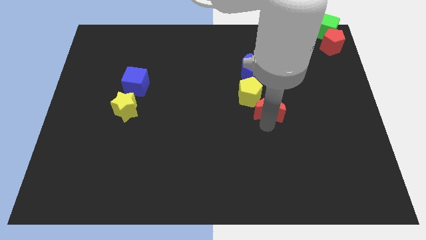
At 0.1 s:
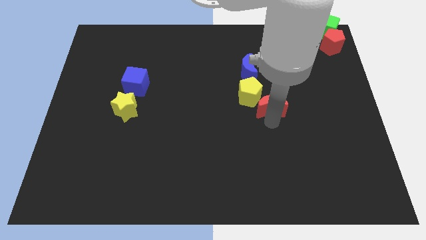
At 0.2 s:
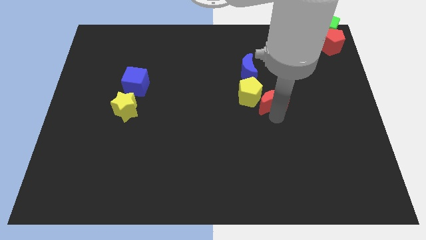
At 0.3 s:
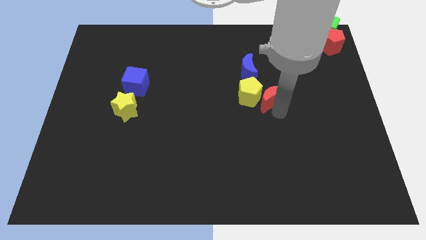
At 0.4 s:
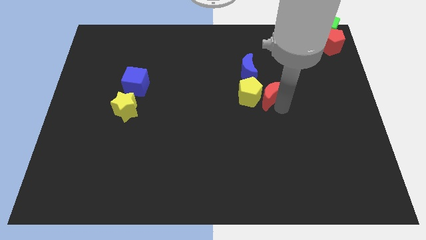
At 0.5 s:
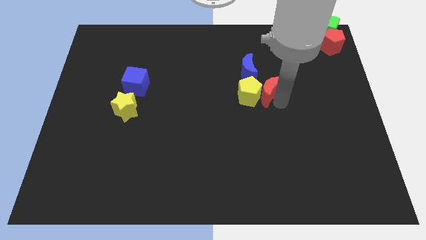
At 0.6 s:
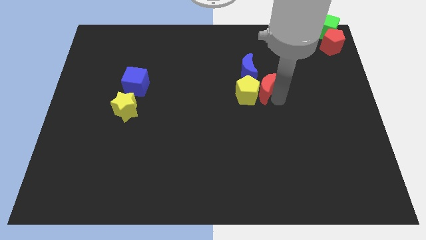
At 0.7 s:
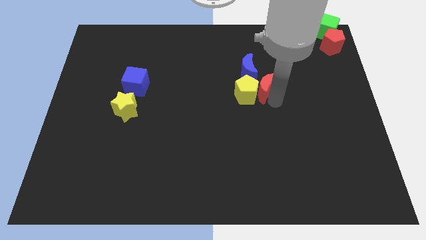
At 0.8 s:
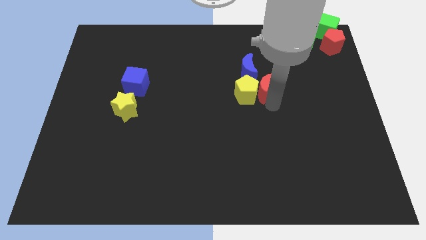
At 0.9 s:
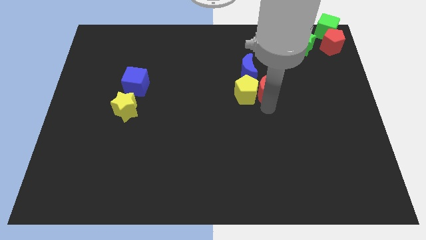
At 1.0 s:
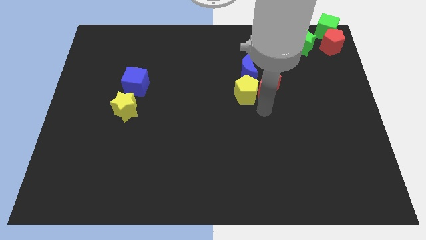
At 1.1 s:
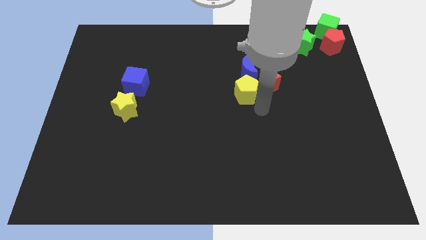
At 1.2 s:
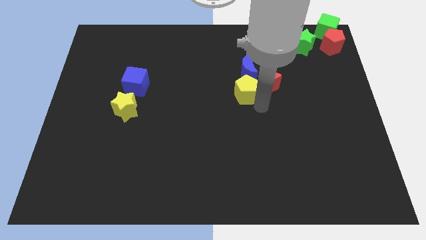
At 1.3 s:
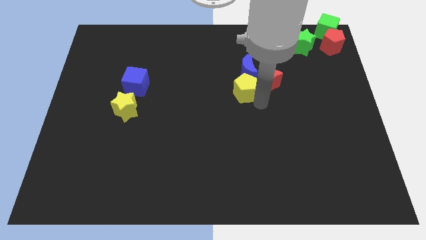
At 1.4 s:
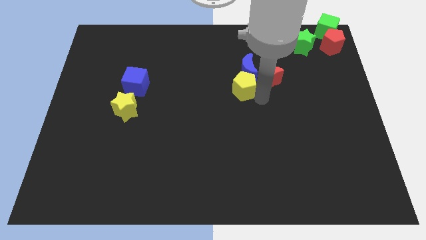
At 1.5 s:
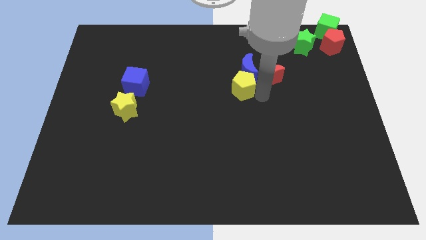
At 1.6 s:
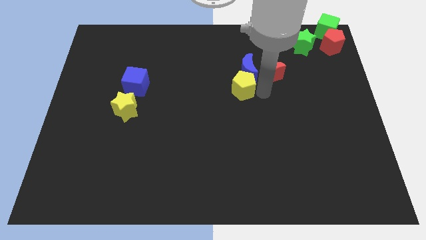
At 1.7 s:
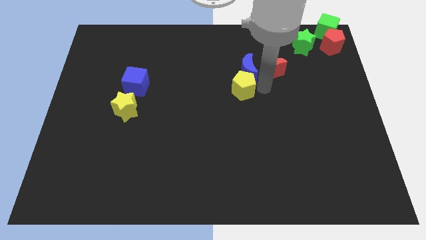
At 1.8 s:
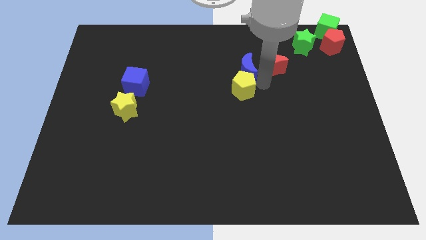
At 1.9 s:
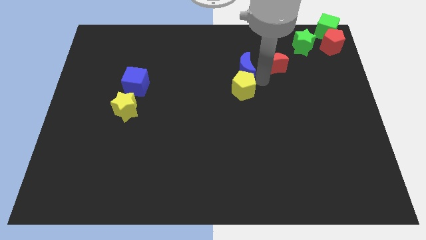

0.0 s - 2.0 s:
put the red moon right to the blue moon

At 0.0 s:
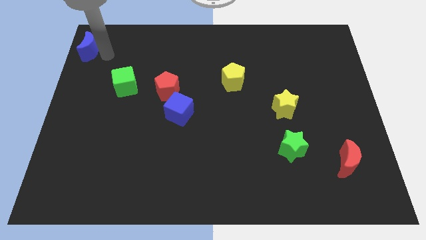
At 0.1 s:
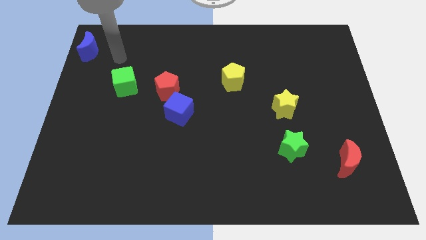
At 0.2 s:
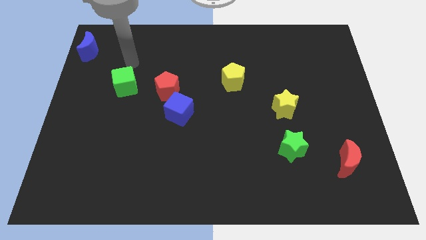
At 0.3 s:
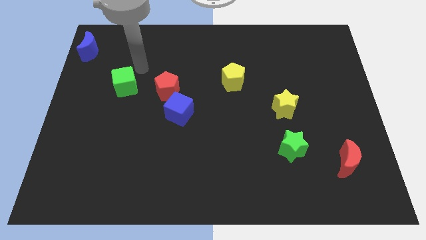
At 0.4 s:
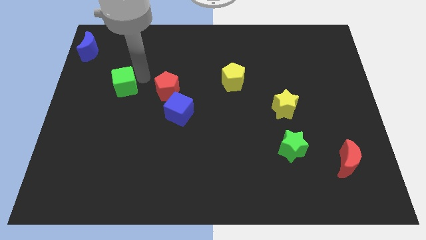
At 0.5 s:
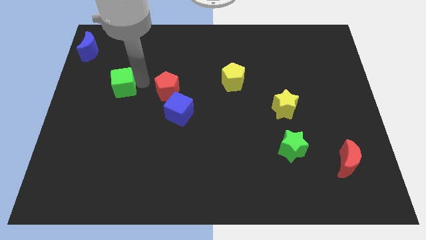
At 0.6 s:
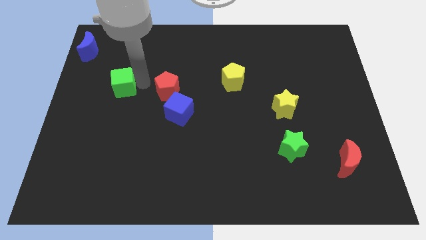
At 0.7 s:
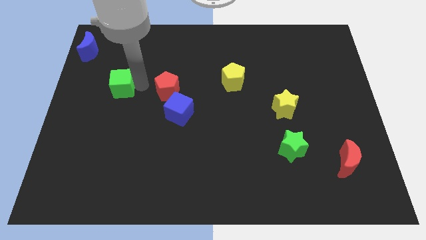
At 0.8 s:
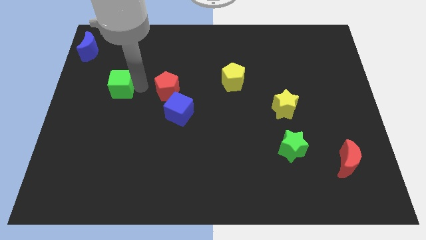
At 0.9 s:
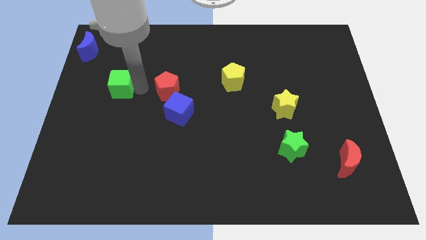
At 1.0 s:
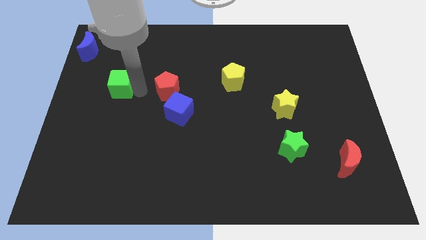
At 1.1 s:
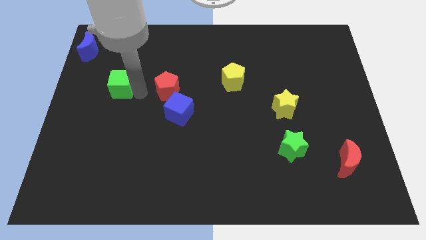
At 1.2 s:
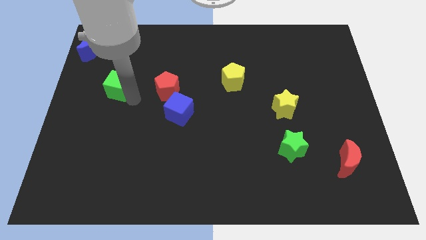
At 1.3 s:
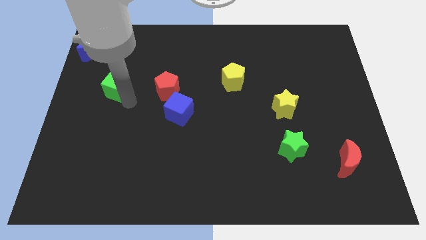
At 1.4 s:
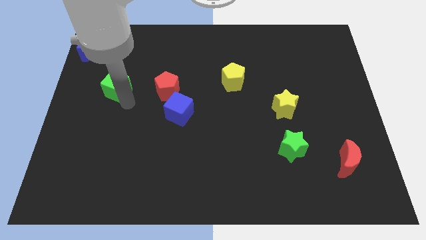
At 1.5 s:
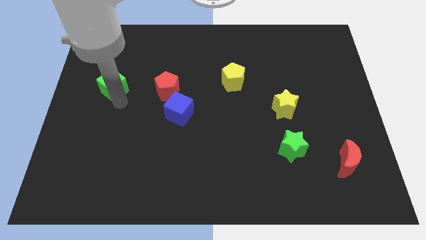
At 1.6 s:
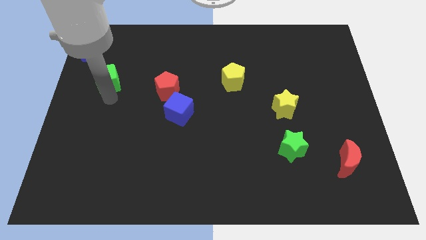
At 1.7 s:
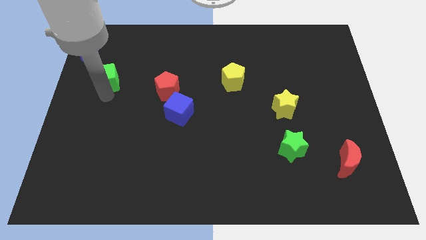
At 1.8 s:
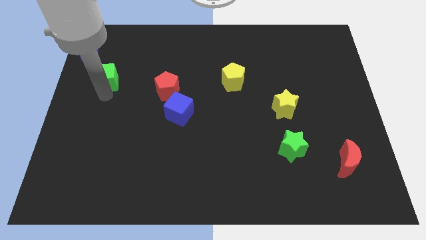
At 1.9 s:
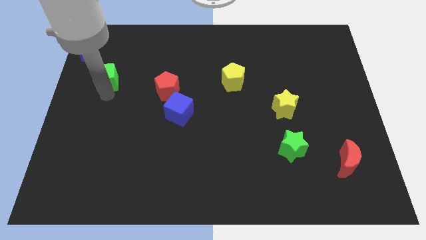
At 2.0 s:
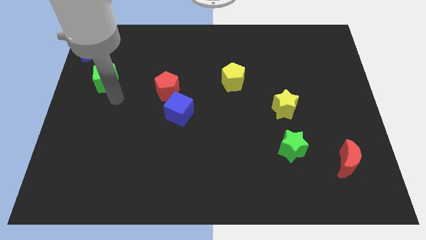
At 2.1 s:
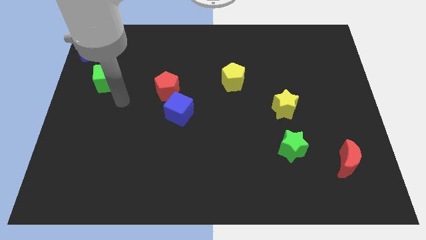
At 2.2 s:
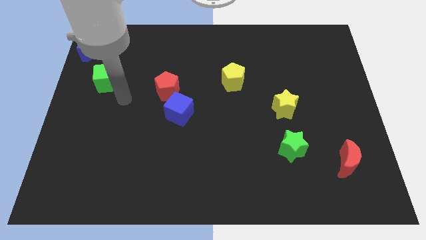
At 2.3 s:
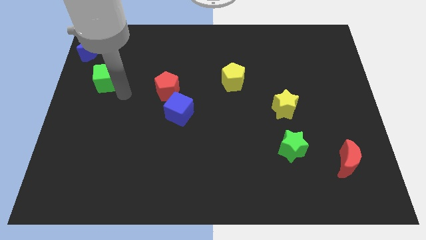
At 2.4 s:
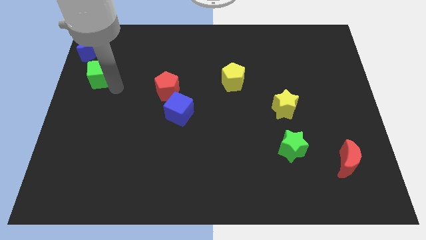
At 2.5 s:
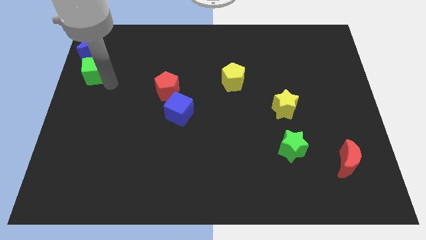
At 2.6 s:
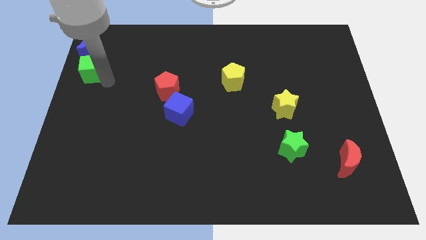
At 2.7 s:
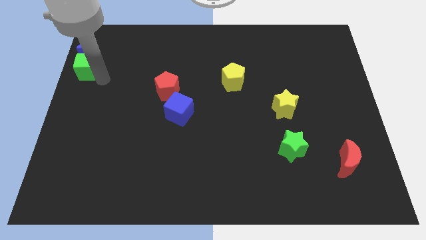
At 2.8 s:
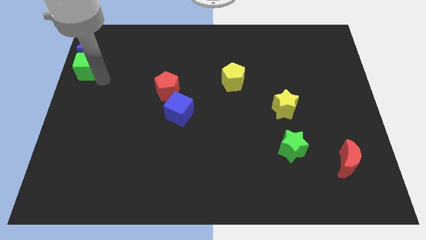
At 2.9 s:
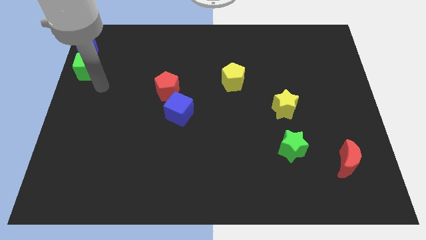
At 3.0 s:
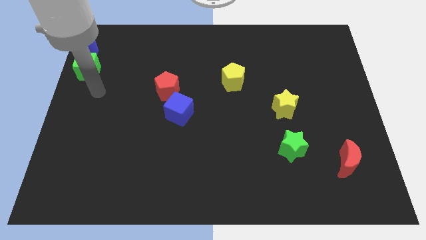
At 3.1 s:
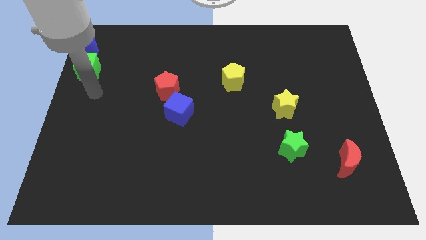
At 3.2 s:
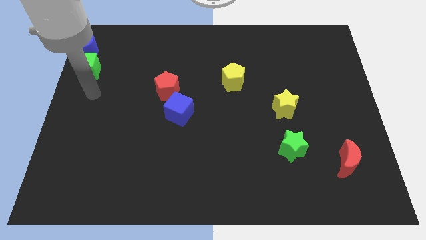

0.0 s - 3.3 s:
move the green cube to the bottom of the blue crescent

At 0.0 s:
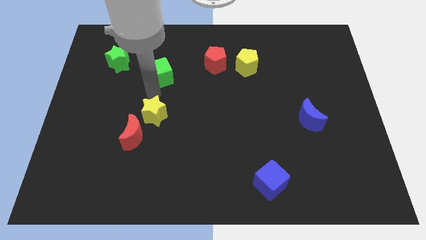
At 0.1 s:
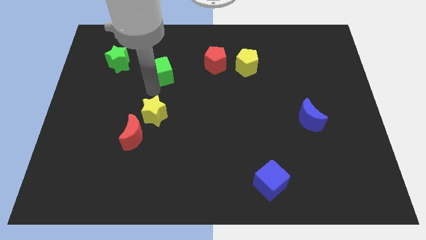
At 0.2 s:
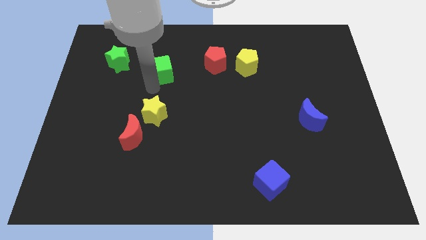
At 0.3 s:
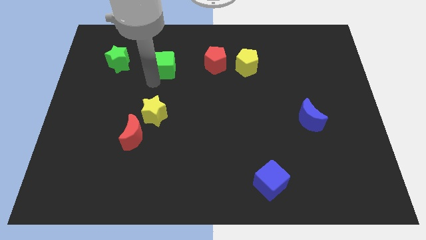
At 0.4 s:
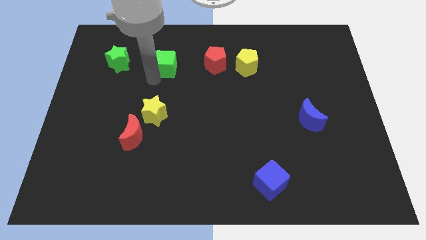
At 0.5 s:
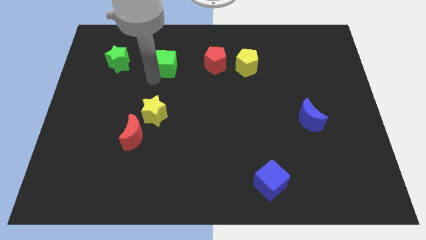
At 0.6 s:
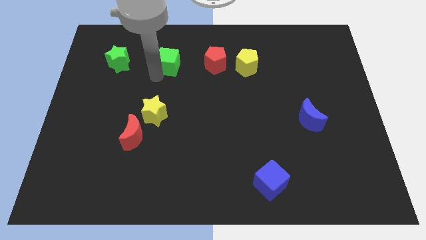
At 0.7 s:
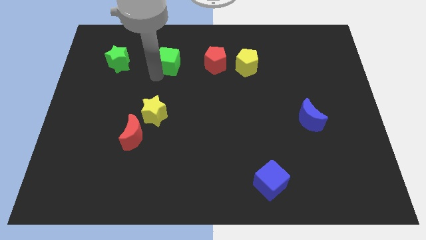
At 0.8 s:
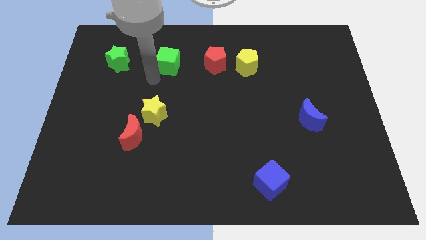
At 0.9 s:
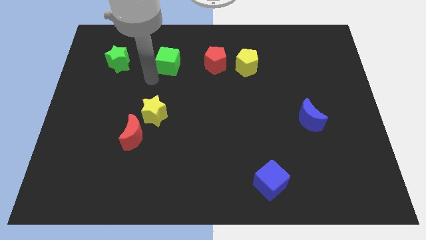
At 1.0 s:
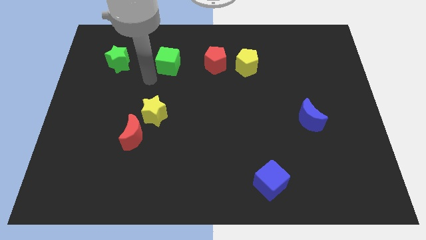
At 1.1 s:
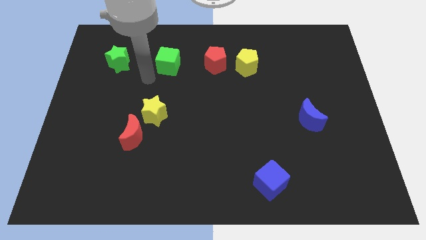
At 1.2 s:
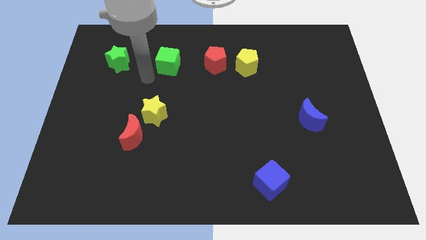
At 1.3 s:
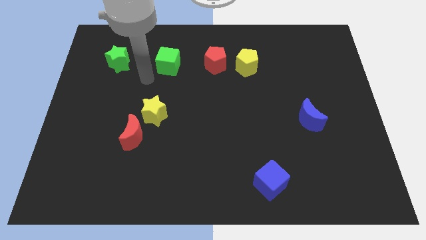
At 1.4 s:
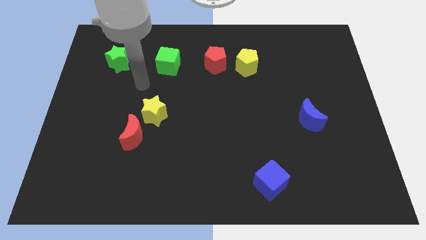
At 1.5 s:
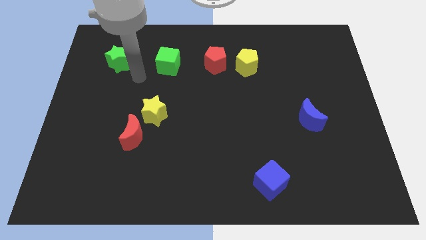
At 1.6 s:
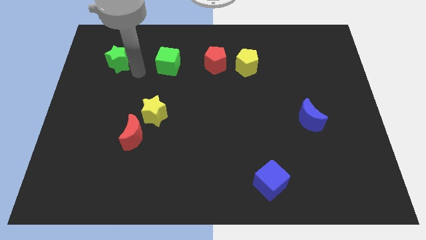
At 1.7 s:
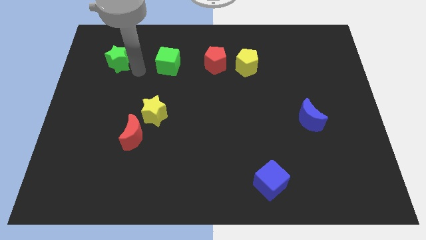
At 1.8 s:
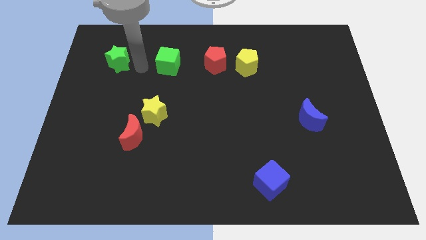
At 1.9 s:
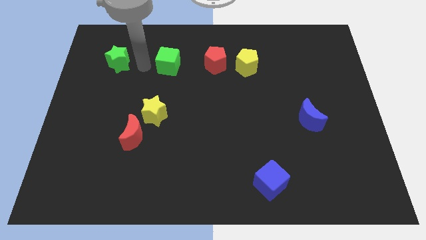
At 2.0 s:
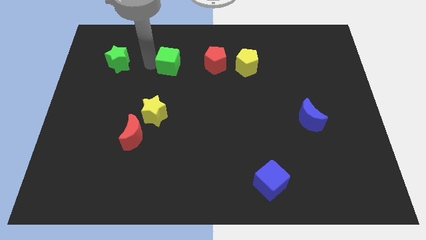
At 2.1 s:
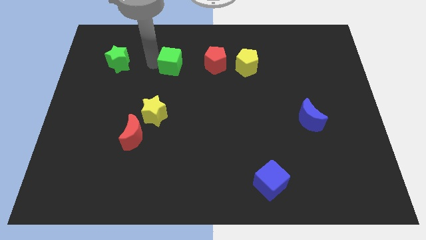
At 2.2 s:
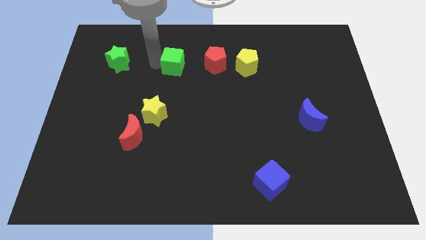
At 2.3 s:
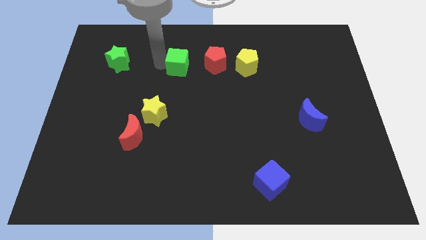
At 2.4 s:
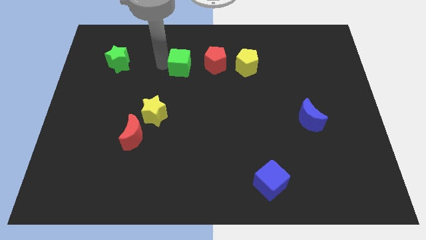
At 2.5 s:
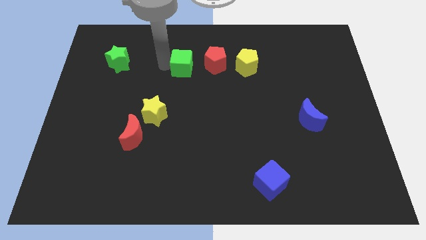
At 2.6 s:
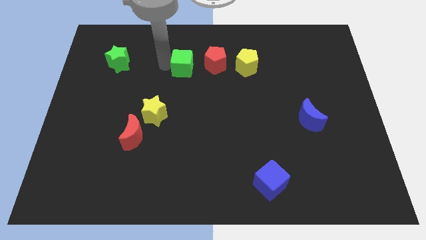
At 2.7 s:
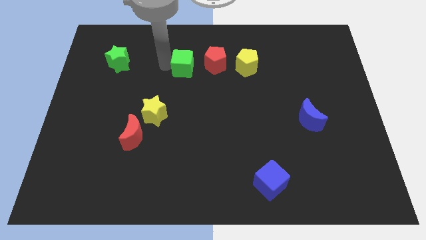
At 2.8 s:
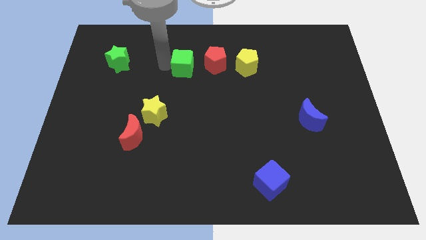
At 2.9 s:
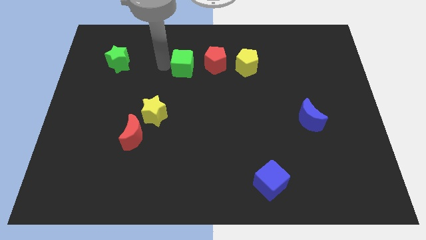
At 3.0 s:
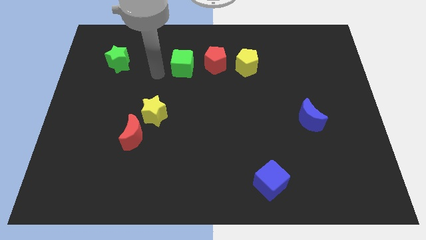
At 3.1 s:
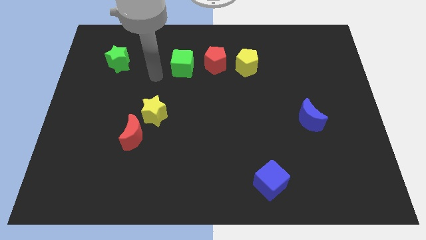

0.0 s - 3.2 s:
move the green cube to the left of red red pentagon

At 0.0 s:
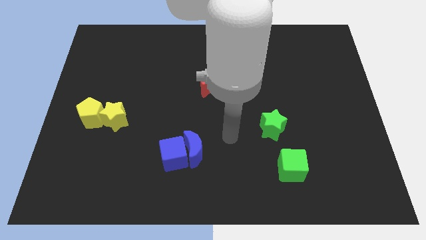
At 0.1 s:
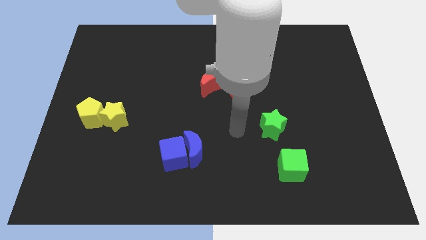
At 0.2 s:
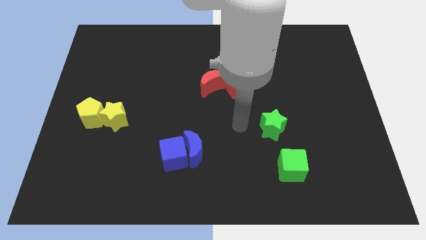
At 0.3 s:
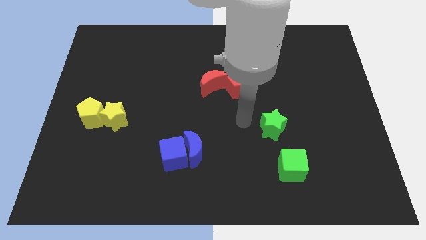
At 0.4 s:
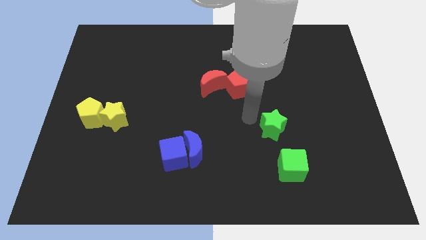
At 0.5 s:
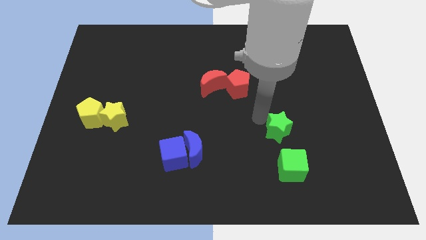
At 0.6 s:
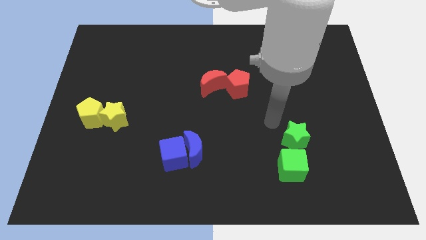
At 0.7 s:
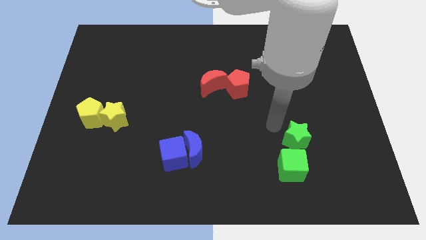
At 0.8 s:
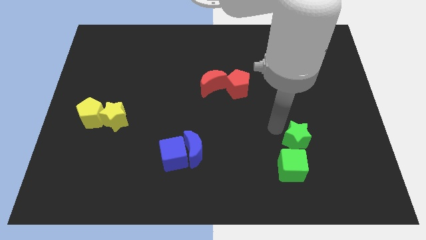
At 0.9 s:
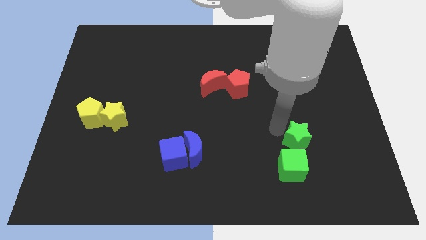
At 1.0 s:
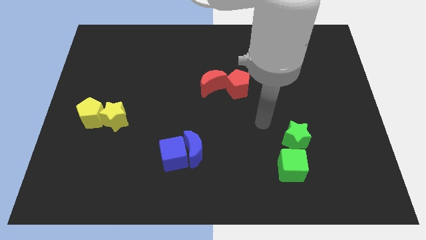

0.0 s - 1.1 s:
move green star top of the green cube
